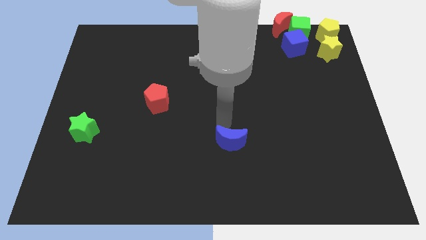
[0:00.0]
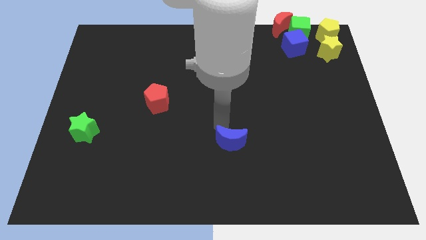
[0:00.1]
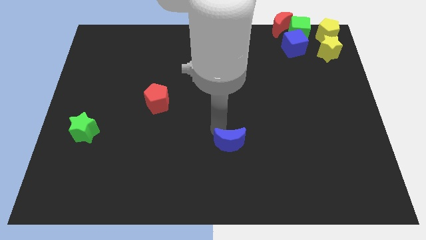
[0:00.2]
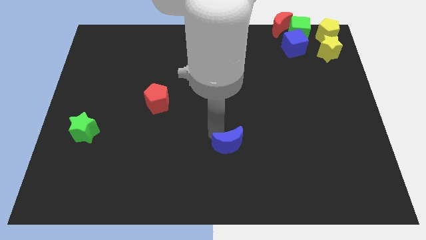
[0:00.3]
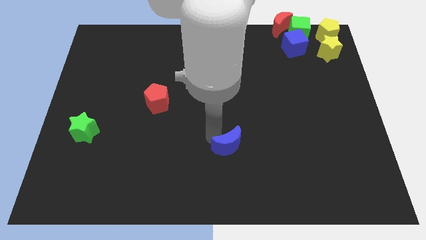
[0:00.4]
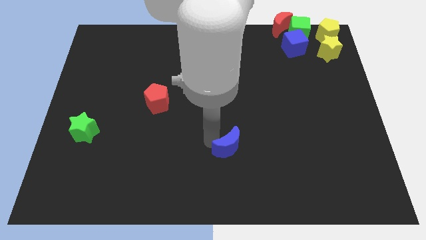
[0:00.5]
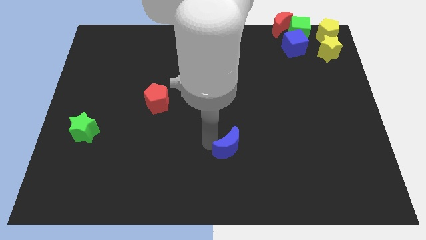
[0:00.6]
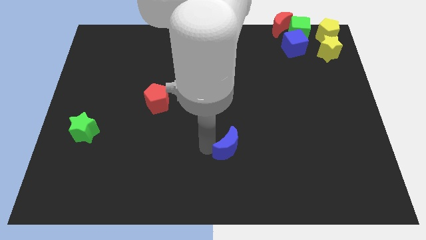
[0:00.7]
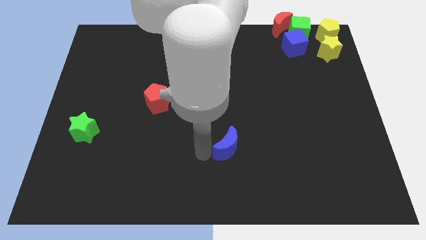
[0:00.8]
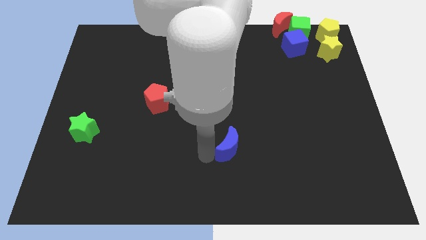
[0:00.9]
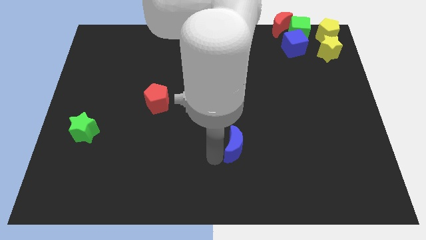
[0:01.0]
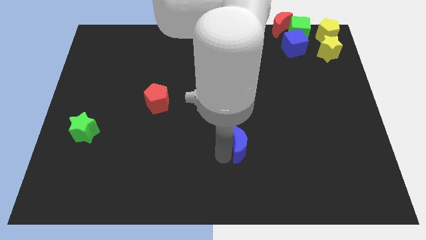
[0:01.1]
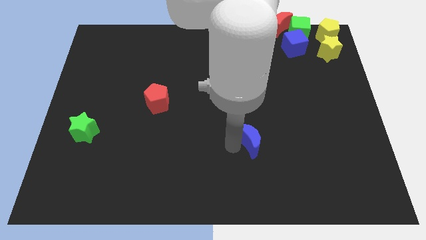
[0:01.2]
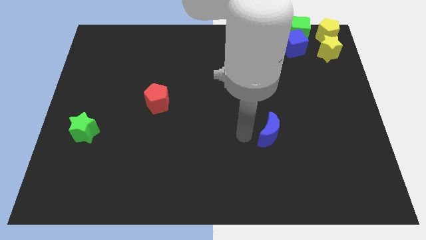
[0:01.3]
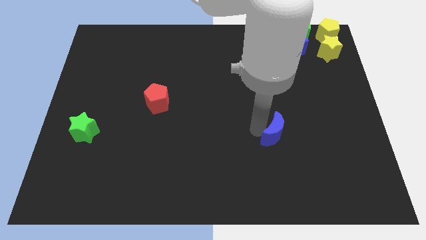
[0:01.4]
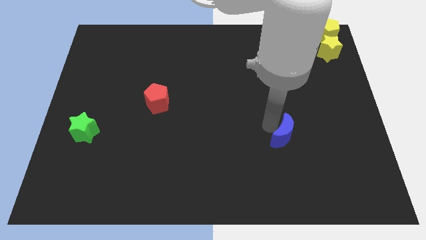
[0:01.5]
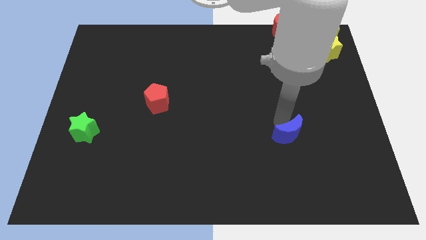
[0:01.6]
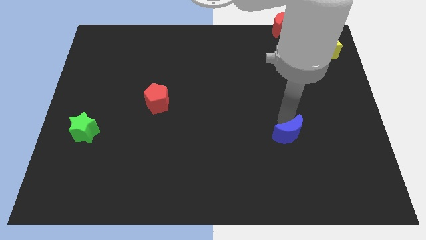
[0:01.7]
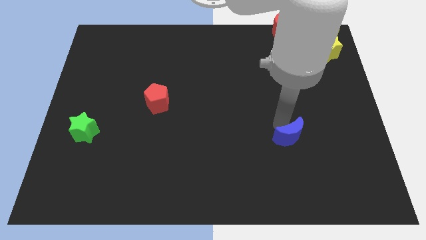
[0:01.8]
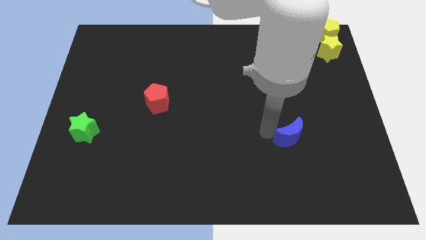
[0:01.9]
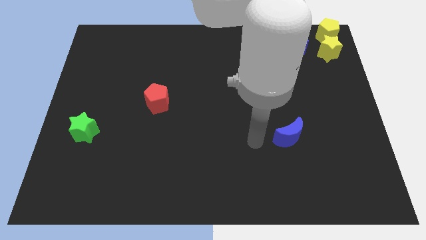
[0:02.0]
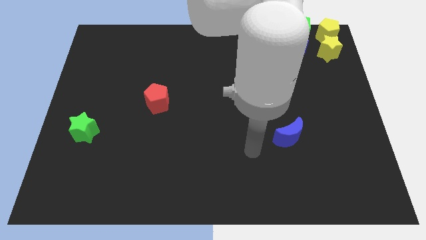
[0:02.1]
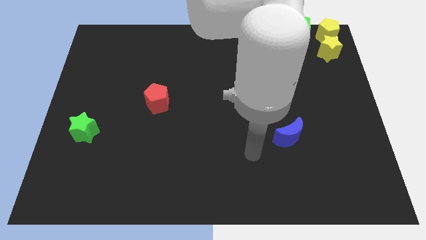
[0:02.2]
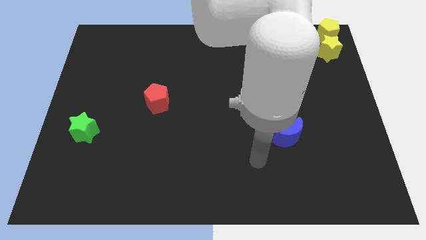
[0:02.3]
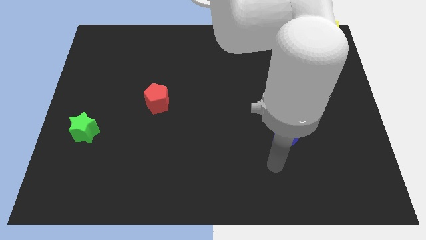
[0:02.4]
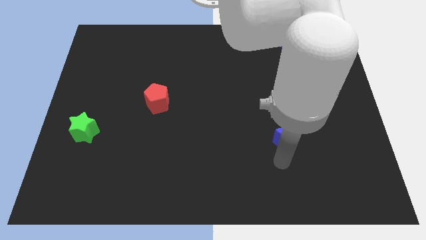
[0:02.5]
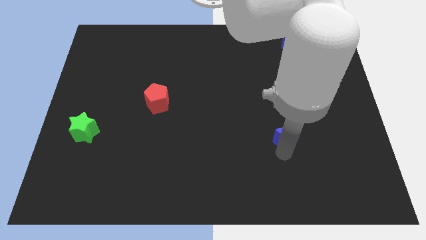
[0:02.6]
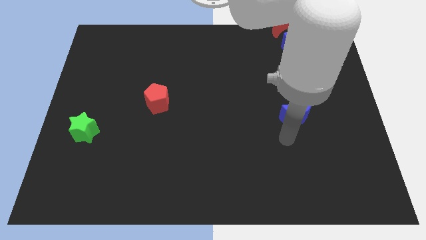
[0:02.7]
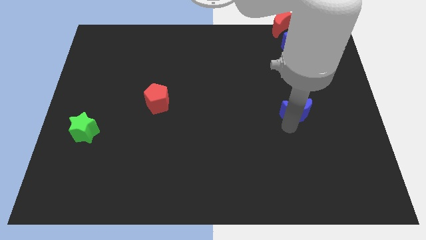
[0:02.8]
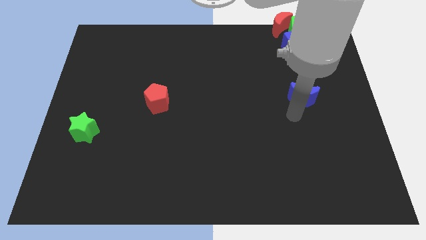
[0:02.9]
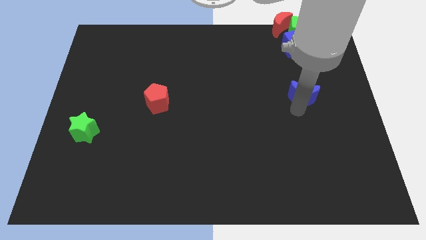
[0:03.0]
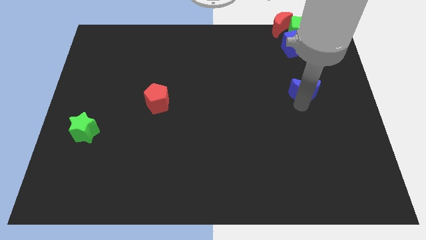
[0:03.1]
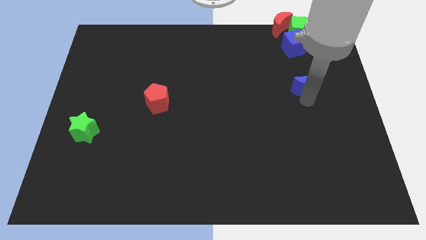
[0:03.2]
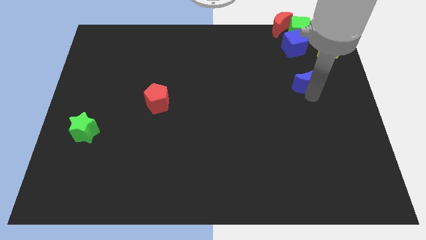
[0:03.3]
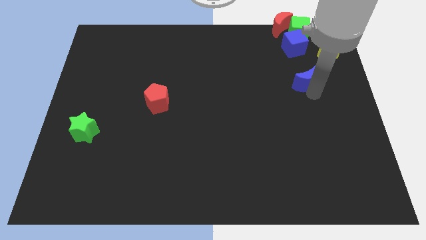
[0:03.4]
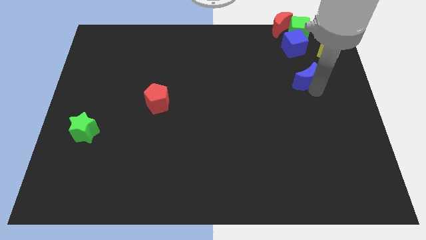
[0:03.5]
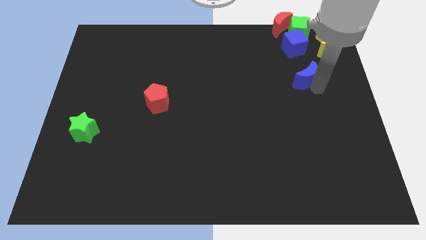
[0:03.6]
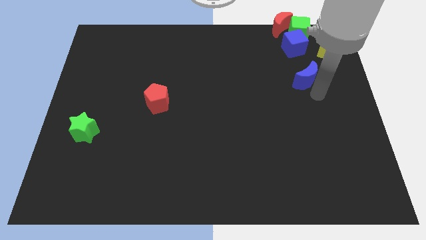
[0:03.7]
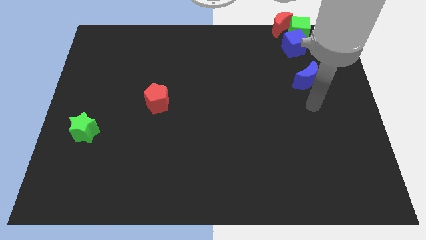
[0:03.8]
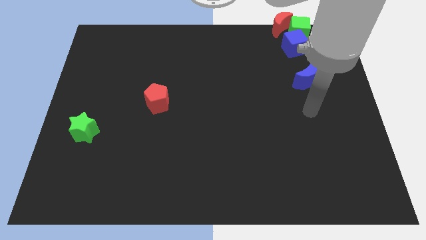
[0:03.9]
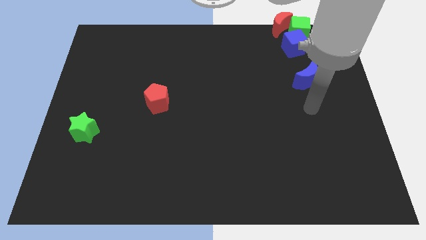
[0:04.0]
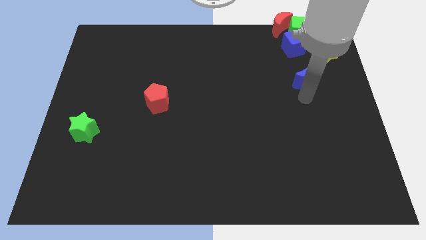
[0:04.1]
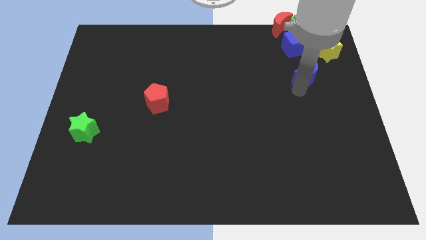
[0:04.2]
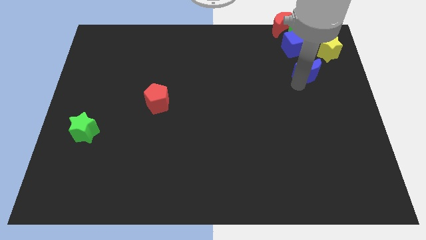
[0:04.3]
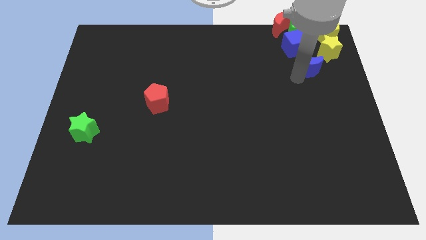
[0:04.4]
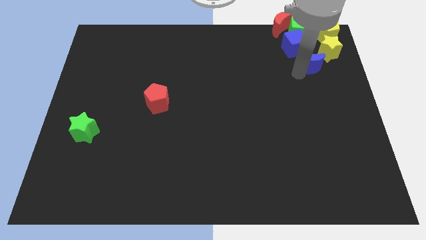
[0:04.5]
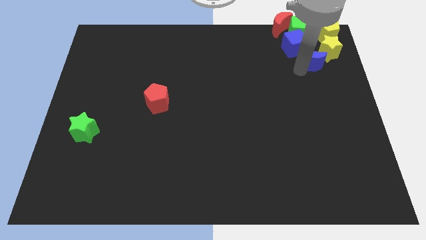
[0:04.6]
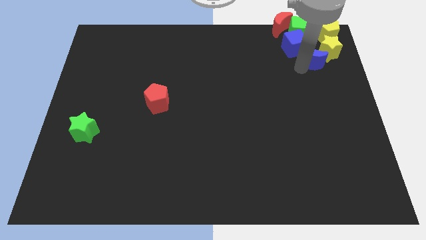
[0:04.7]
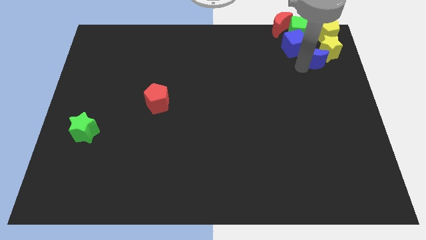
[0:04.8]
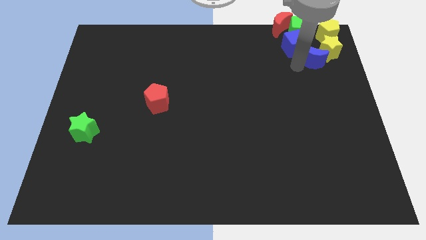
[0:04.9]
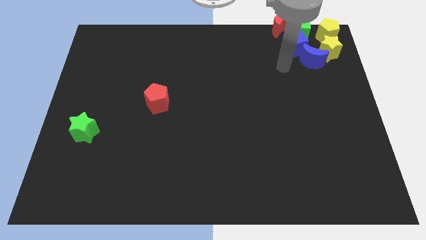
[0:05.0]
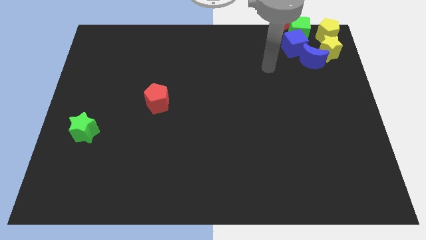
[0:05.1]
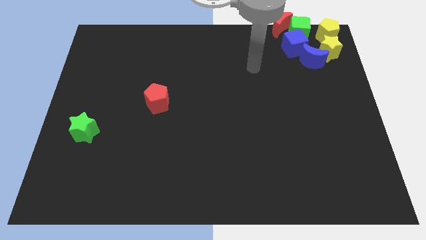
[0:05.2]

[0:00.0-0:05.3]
move the blue crescent towards the yellow star

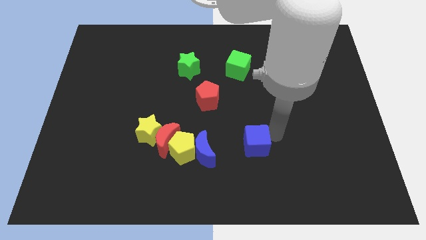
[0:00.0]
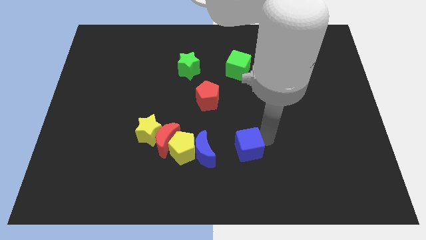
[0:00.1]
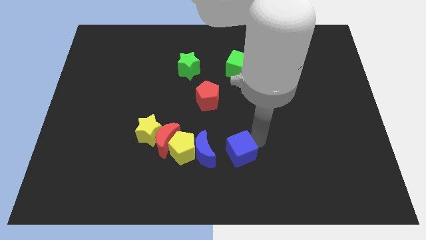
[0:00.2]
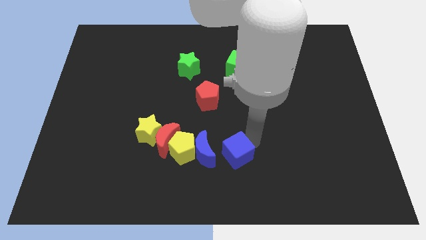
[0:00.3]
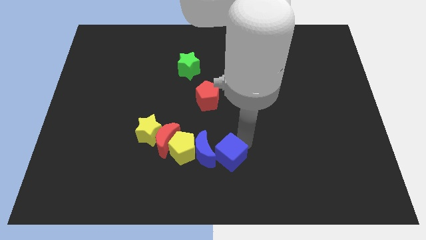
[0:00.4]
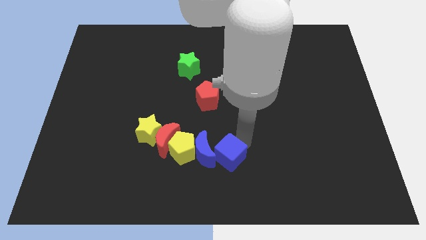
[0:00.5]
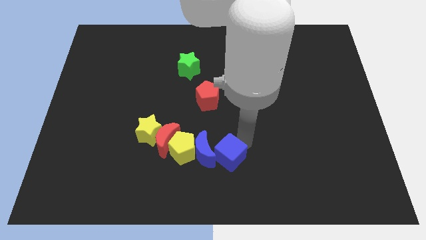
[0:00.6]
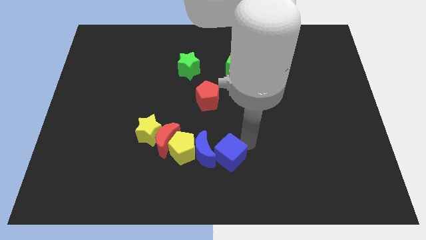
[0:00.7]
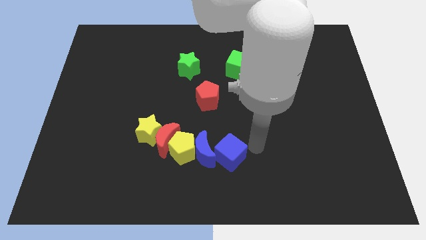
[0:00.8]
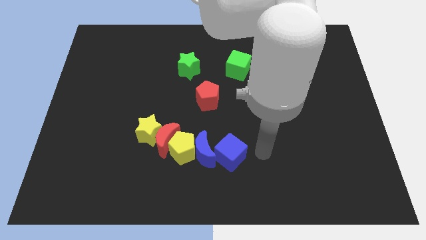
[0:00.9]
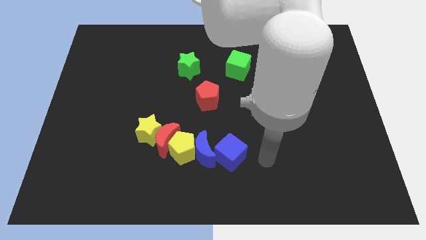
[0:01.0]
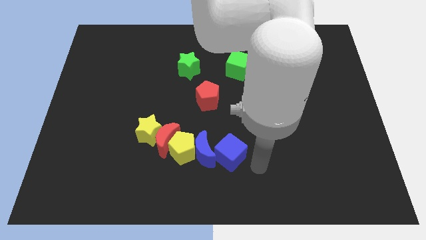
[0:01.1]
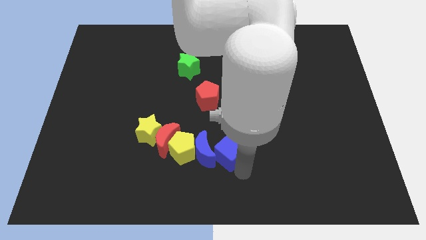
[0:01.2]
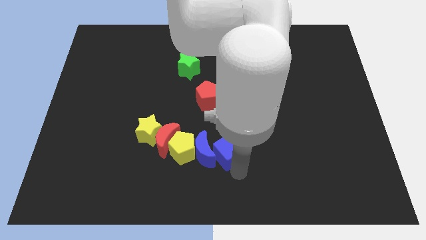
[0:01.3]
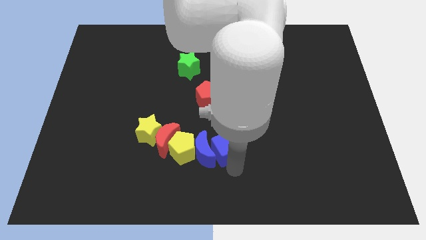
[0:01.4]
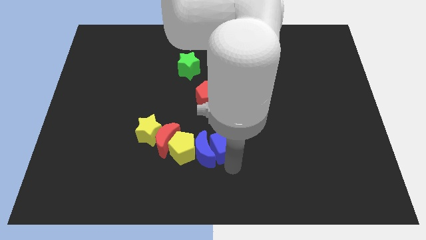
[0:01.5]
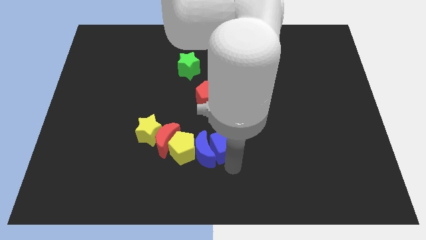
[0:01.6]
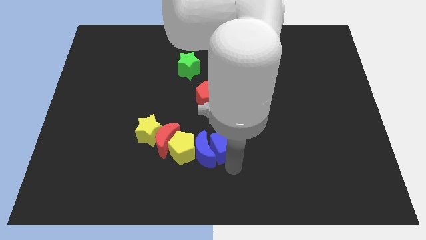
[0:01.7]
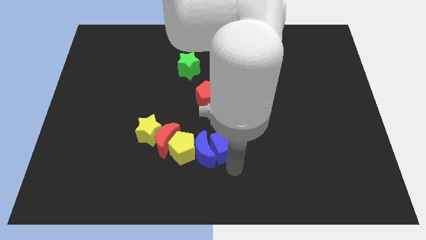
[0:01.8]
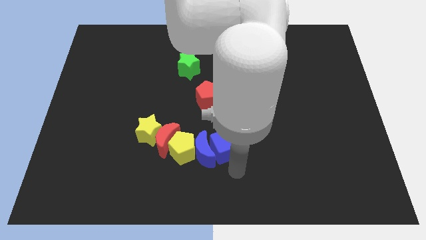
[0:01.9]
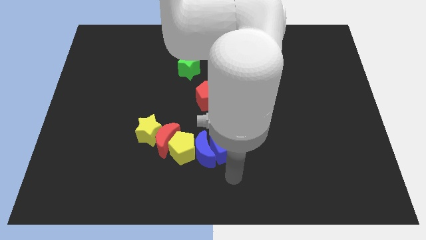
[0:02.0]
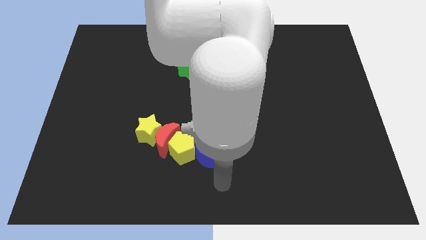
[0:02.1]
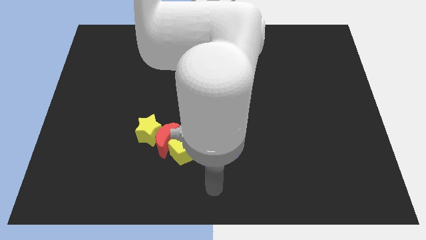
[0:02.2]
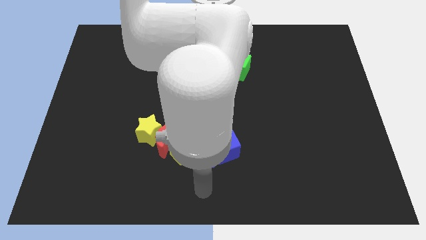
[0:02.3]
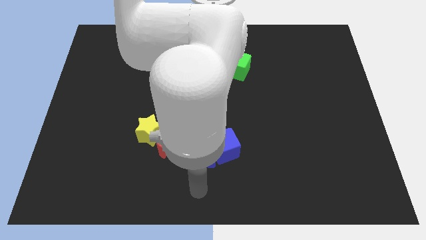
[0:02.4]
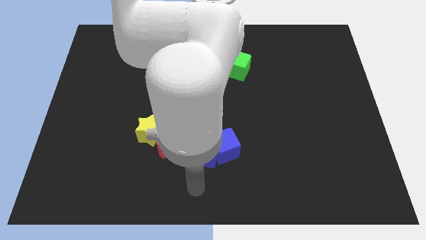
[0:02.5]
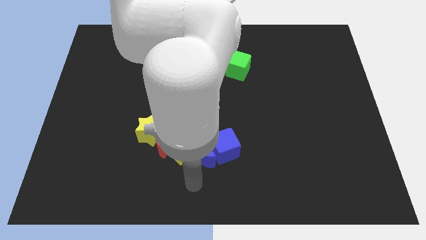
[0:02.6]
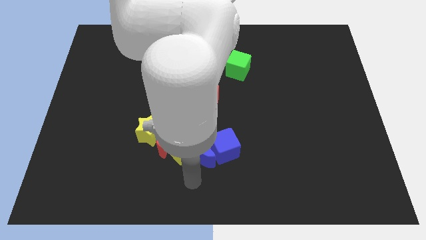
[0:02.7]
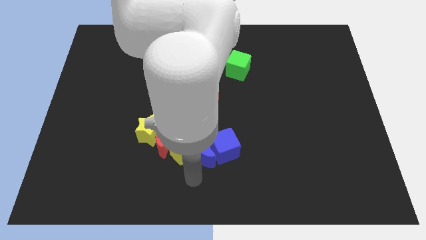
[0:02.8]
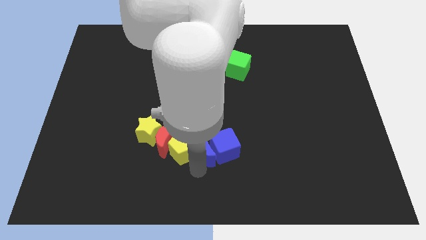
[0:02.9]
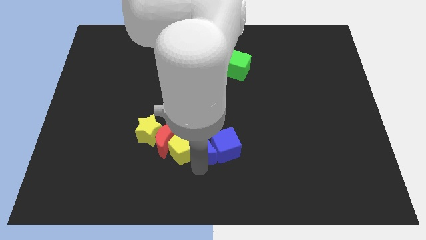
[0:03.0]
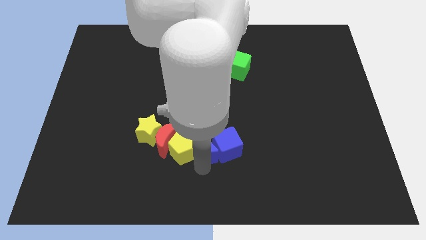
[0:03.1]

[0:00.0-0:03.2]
move the blue cube into the right side of the blue crescent

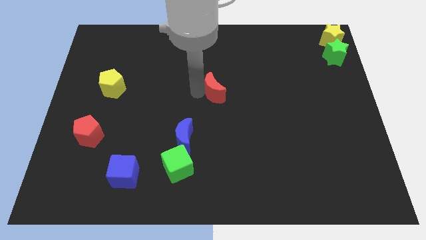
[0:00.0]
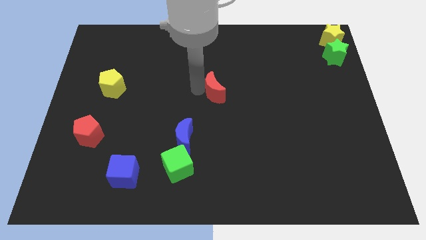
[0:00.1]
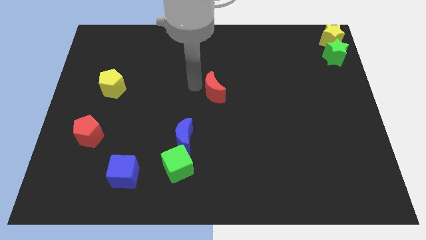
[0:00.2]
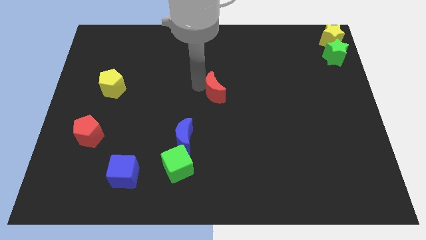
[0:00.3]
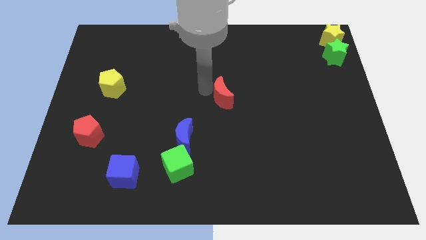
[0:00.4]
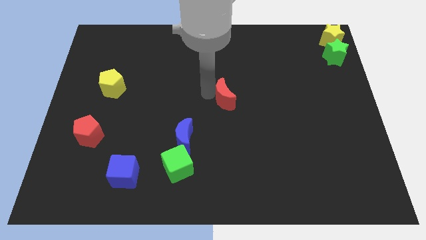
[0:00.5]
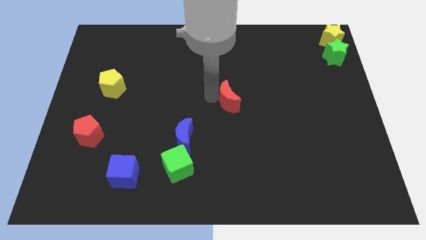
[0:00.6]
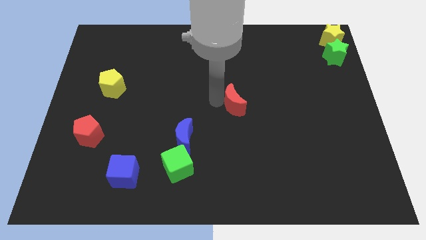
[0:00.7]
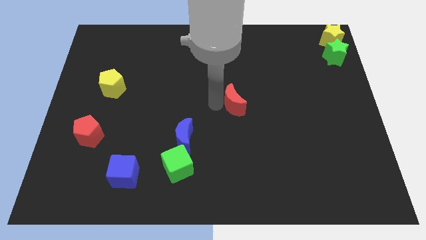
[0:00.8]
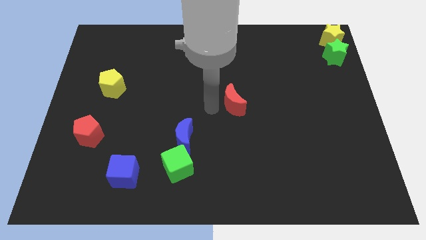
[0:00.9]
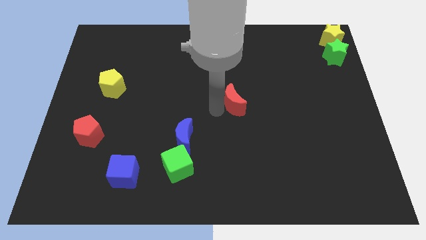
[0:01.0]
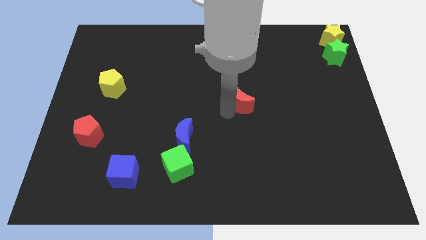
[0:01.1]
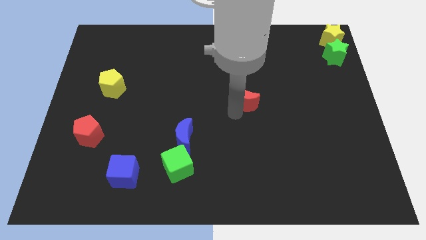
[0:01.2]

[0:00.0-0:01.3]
move red moon to the middle of the board
